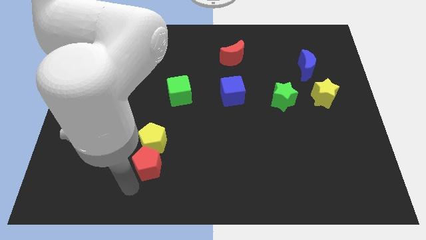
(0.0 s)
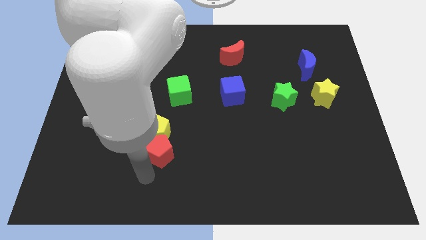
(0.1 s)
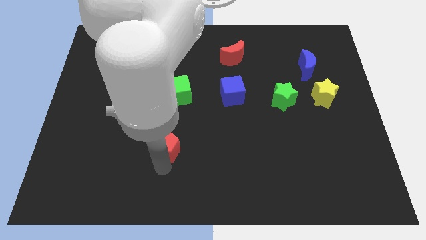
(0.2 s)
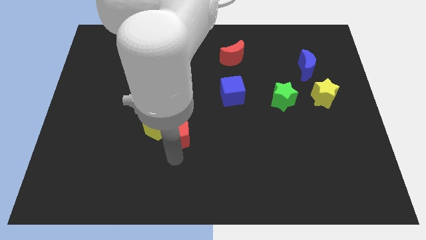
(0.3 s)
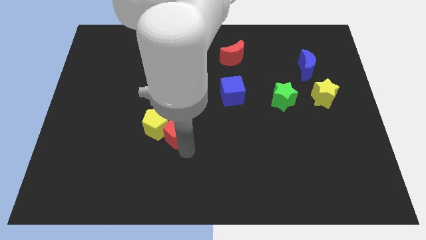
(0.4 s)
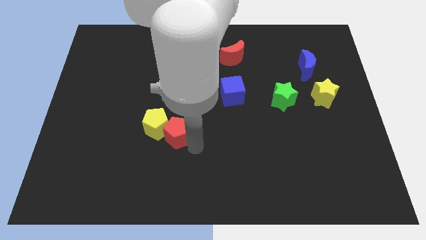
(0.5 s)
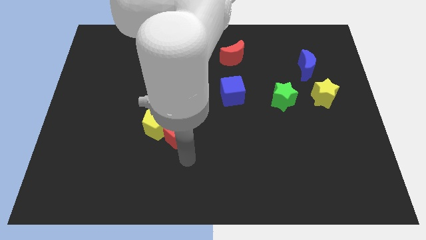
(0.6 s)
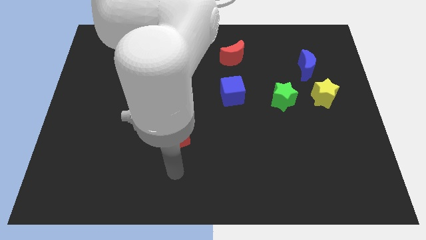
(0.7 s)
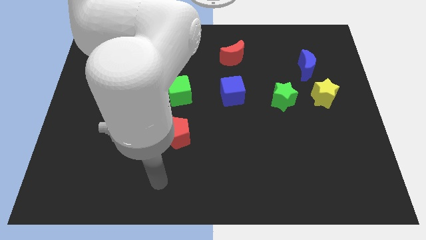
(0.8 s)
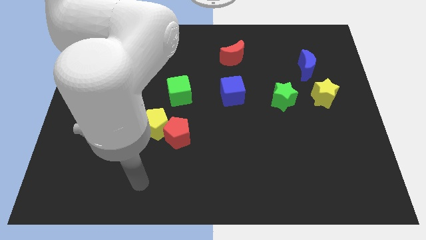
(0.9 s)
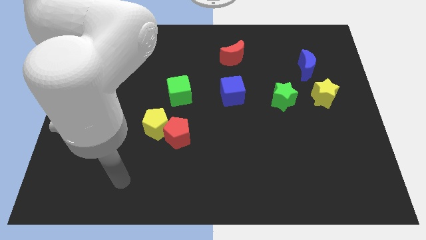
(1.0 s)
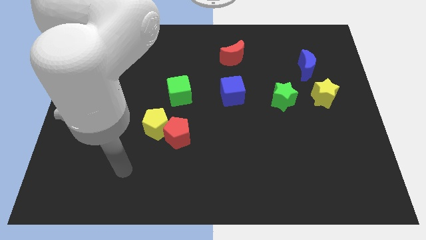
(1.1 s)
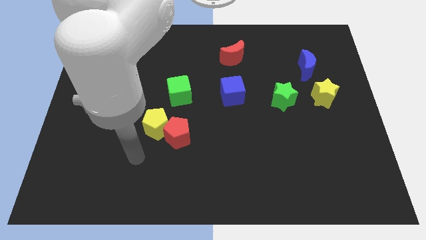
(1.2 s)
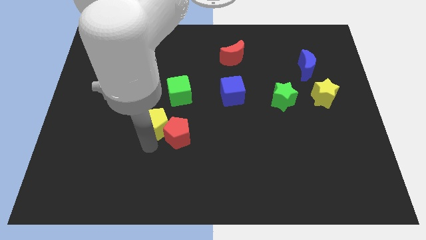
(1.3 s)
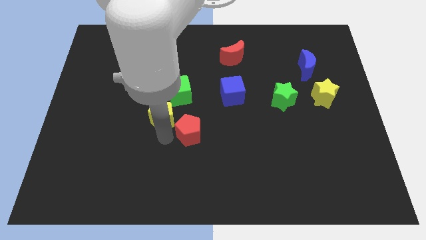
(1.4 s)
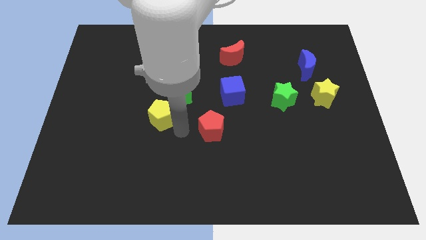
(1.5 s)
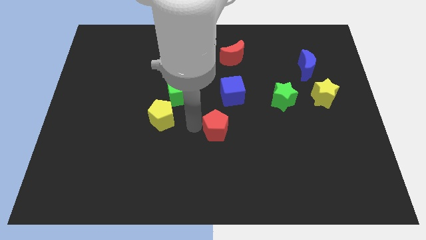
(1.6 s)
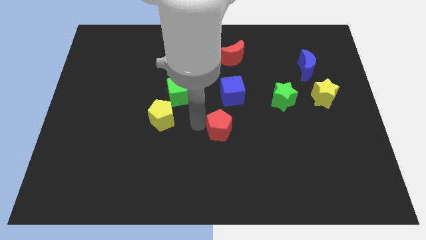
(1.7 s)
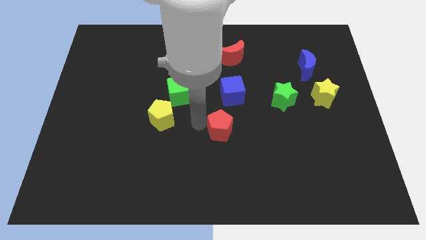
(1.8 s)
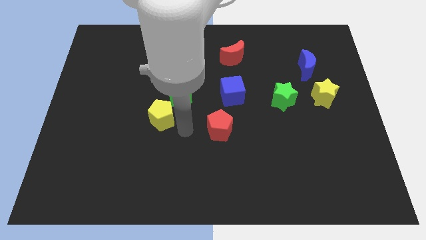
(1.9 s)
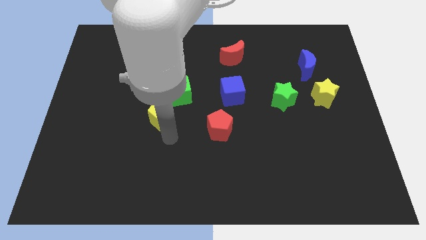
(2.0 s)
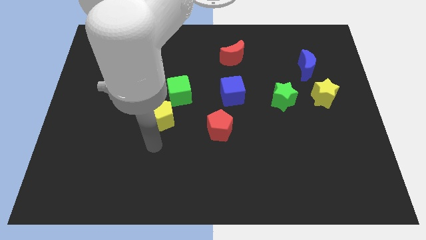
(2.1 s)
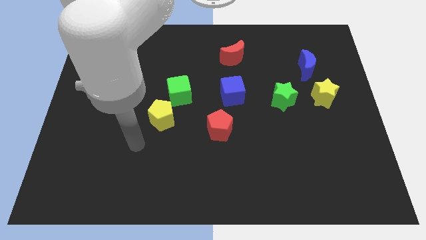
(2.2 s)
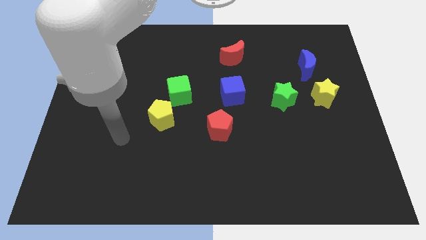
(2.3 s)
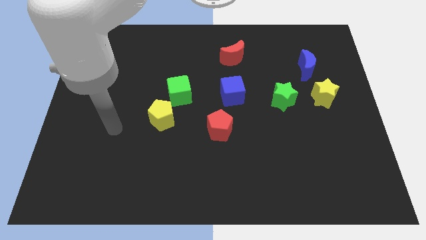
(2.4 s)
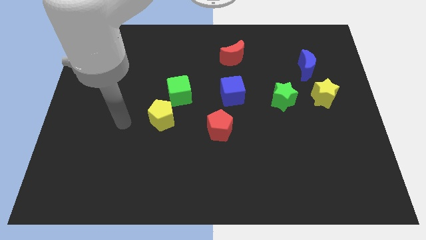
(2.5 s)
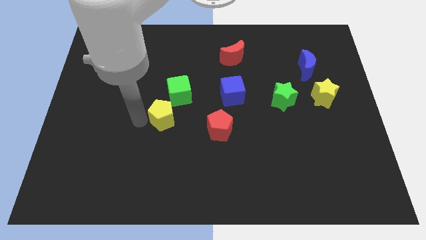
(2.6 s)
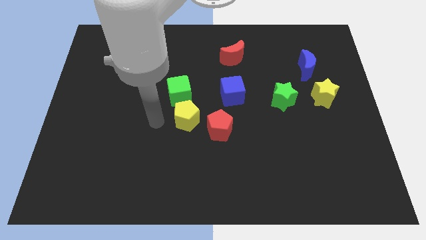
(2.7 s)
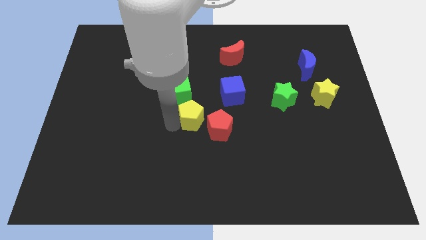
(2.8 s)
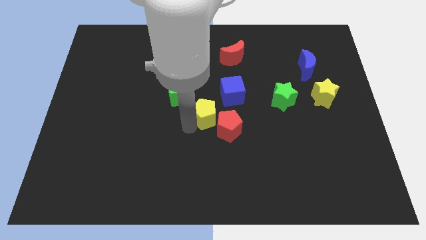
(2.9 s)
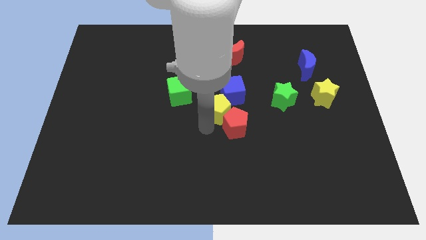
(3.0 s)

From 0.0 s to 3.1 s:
move the red pentagon and the yellow pentagon towards the center of the board

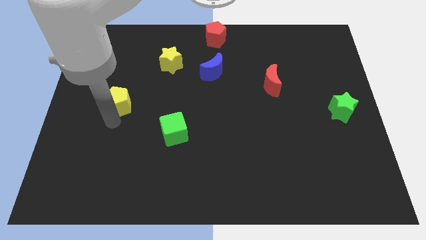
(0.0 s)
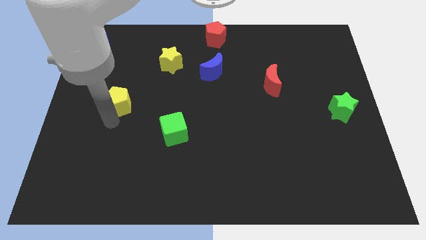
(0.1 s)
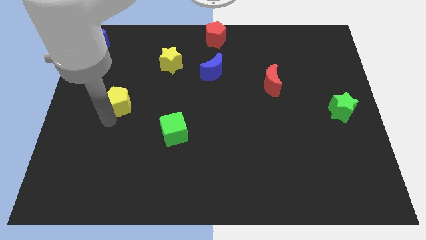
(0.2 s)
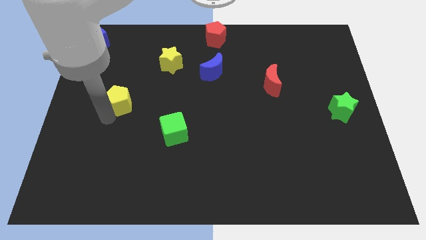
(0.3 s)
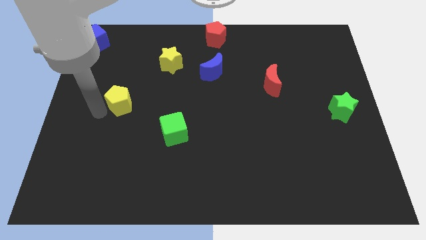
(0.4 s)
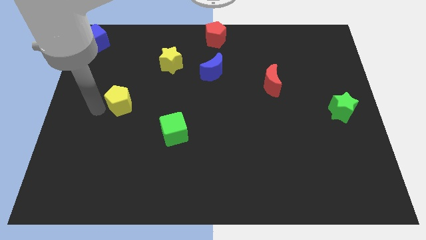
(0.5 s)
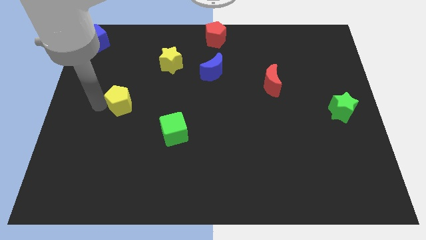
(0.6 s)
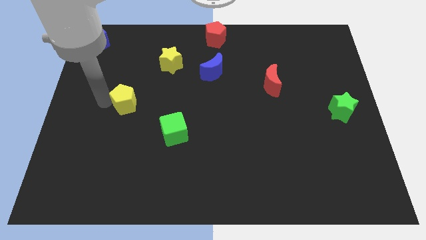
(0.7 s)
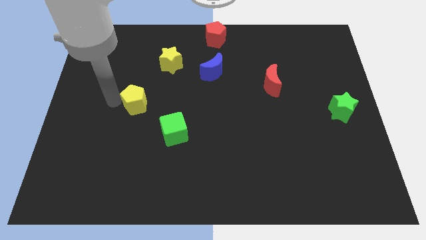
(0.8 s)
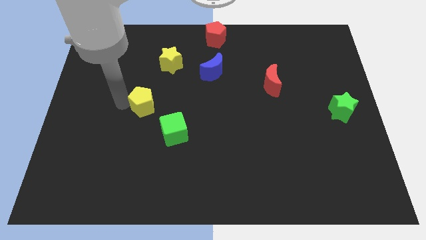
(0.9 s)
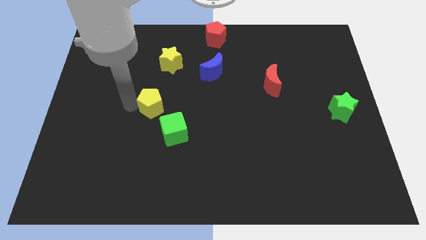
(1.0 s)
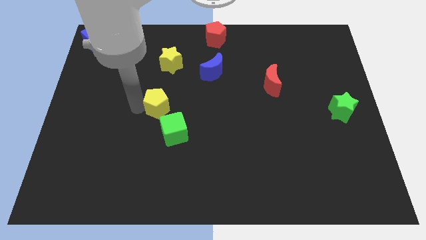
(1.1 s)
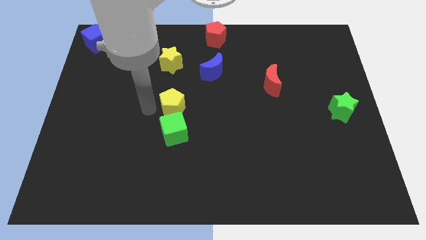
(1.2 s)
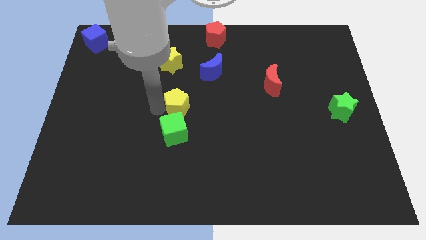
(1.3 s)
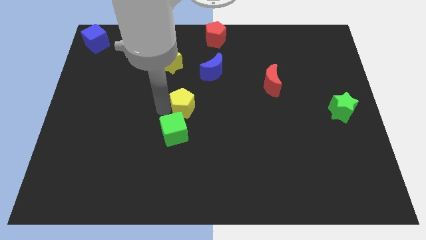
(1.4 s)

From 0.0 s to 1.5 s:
put the yellow pentagon above the green cube

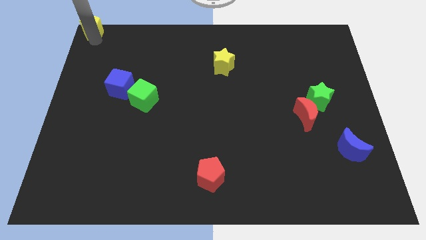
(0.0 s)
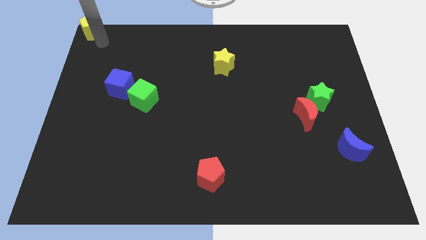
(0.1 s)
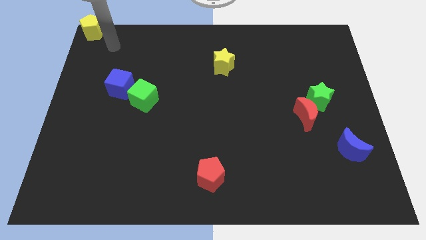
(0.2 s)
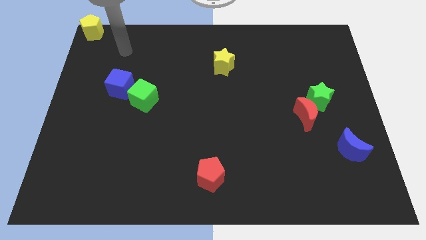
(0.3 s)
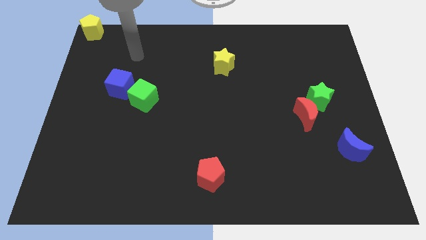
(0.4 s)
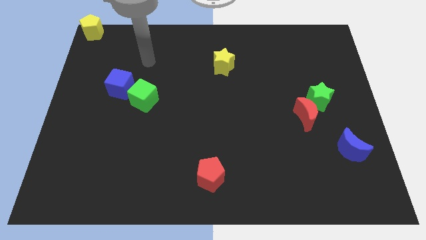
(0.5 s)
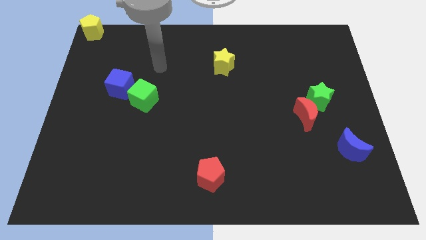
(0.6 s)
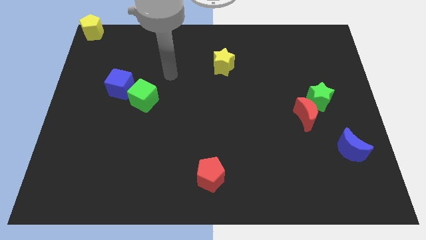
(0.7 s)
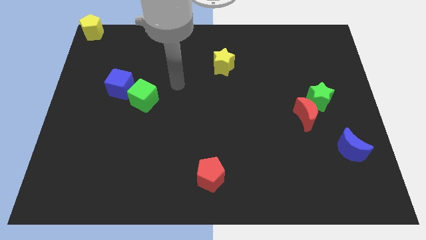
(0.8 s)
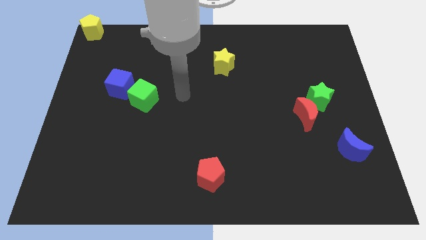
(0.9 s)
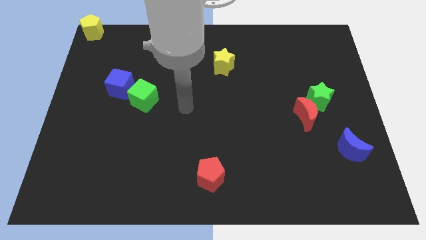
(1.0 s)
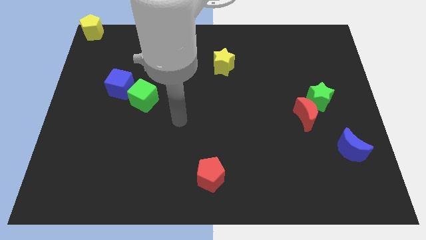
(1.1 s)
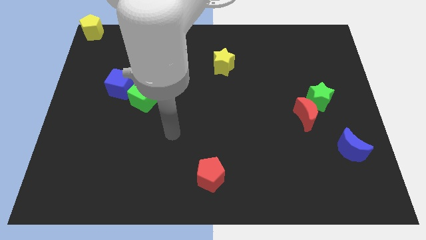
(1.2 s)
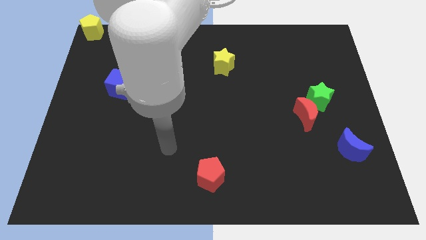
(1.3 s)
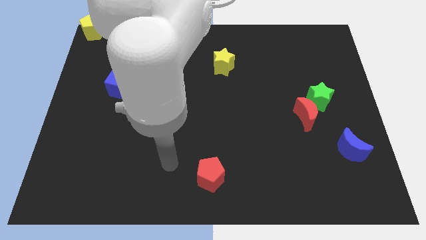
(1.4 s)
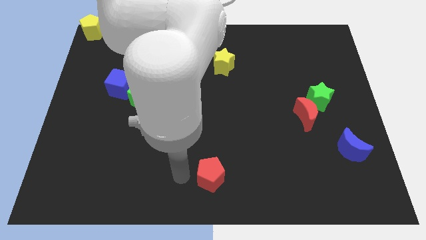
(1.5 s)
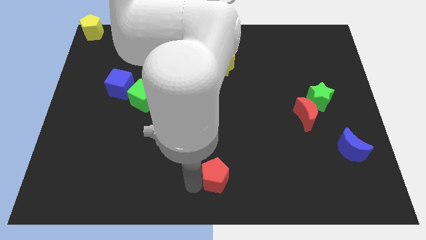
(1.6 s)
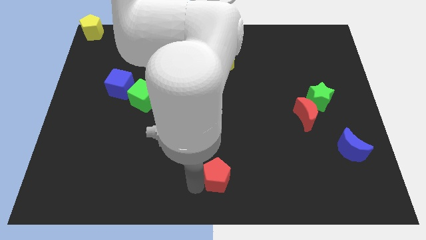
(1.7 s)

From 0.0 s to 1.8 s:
touch the left side of the red pentagon

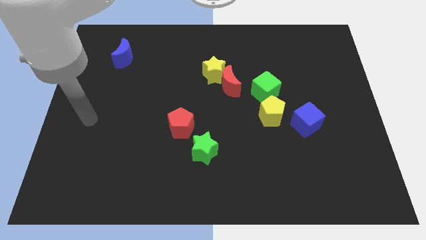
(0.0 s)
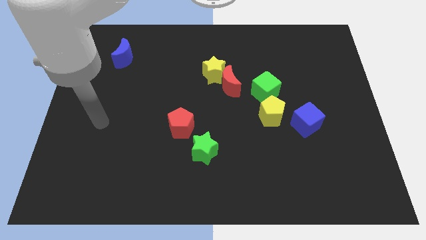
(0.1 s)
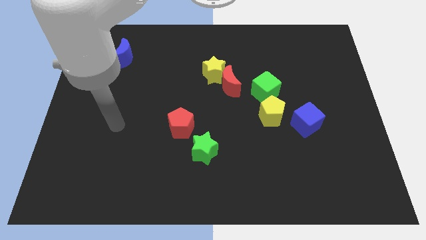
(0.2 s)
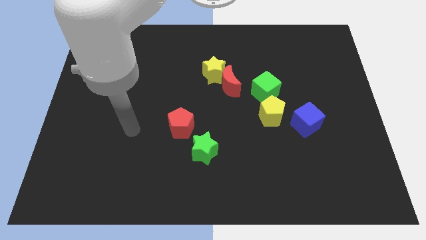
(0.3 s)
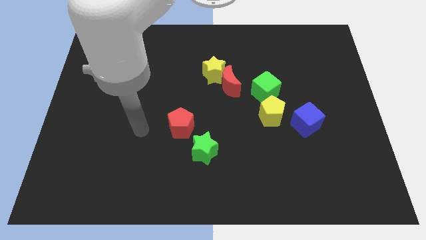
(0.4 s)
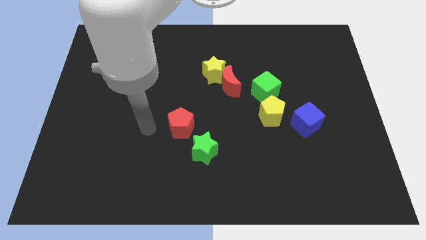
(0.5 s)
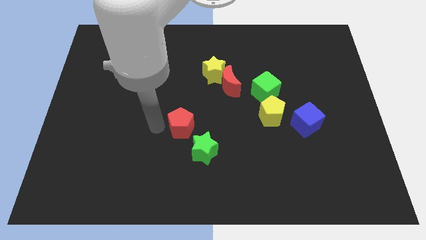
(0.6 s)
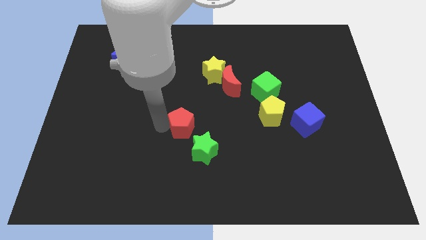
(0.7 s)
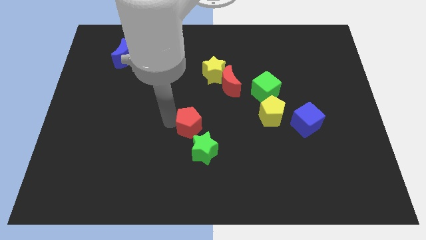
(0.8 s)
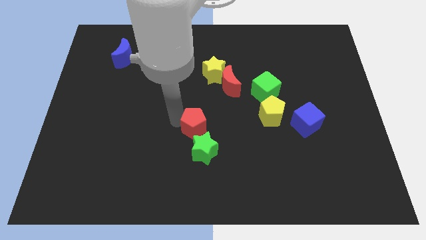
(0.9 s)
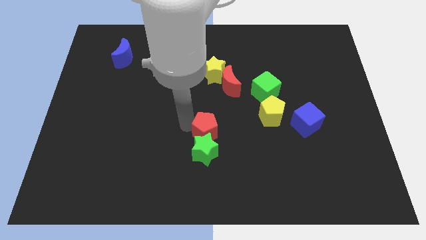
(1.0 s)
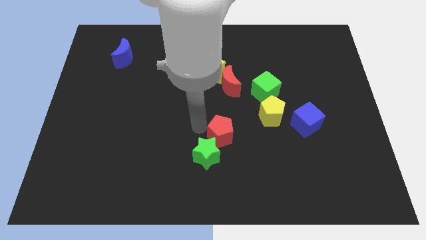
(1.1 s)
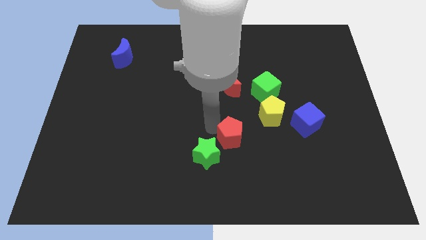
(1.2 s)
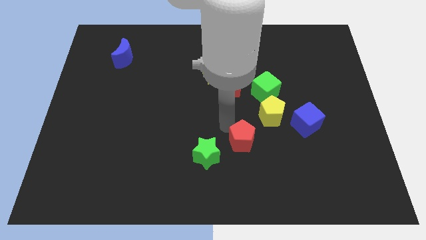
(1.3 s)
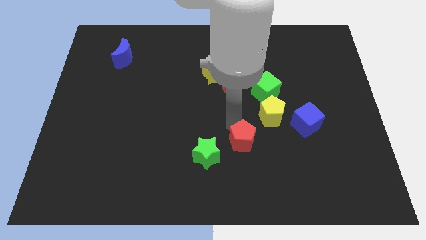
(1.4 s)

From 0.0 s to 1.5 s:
place the red pentagon diagonally in between the yellow pentagon and green star

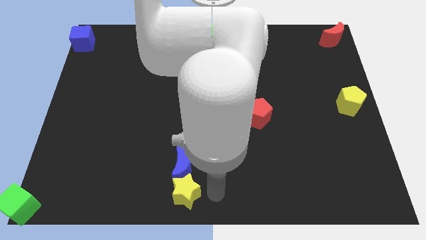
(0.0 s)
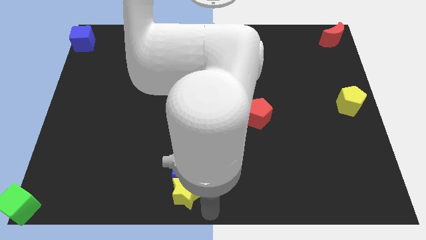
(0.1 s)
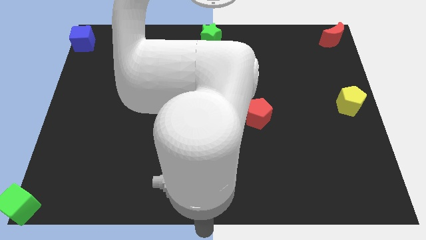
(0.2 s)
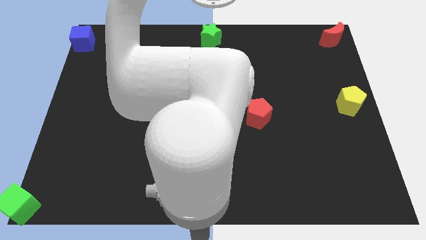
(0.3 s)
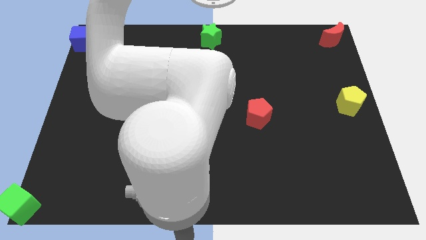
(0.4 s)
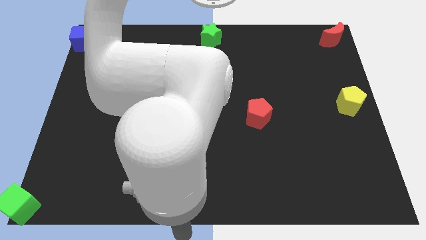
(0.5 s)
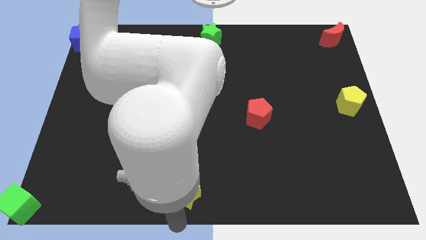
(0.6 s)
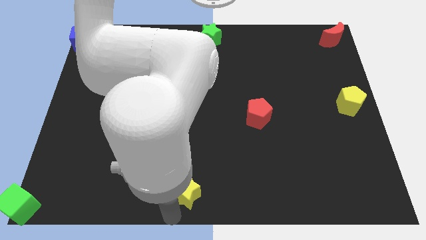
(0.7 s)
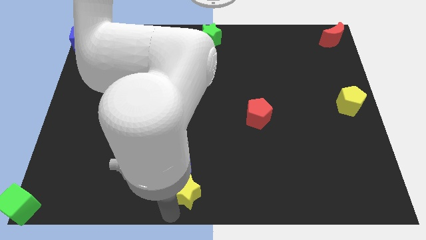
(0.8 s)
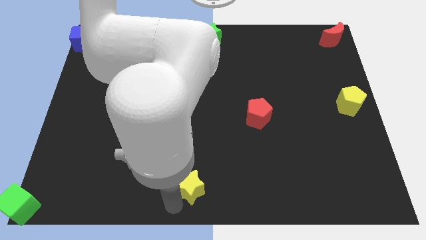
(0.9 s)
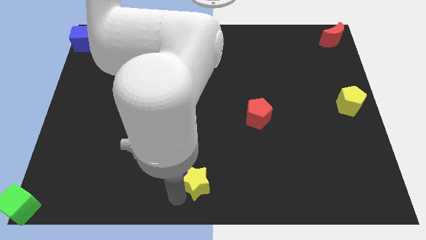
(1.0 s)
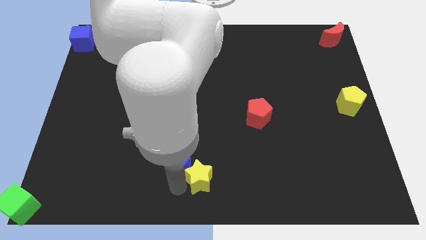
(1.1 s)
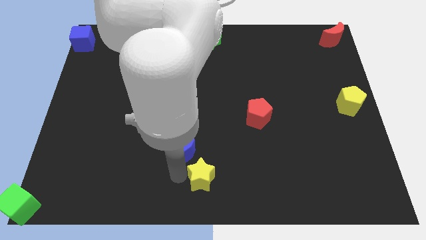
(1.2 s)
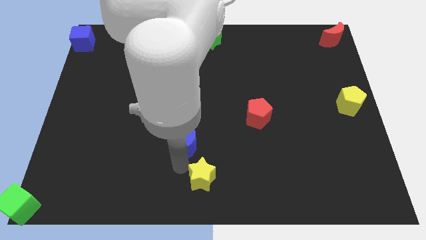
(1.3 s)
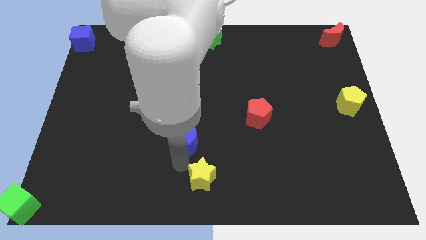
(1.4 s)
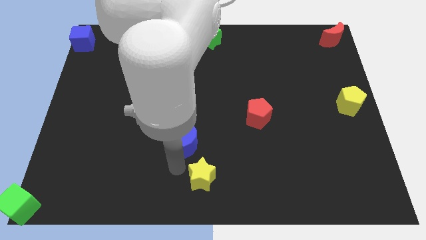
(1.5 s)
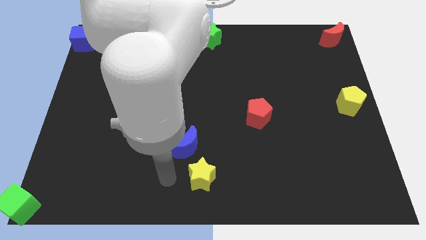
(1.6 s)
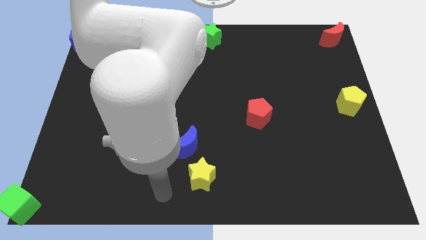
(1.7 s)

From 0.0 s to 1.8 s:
separate the yellow star and the blue crescent
